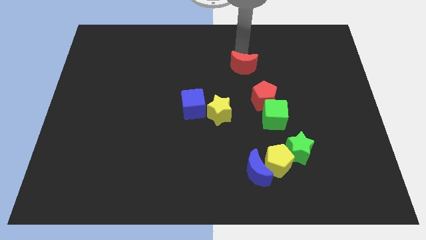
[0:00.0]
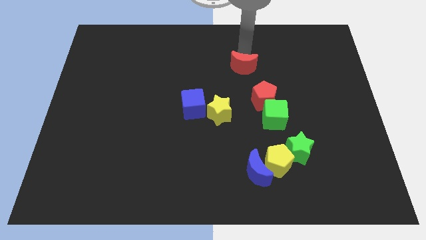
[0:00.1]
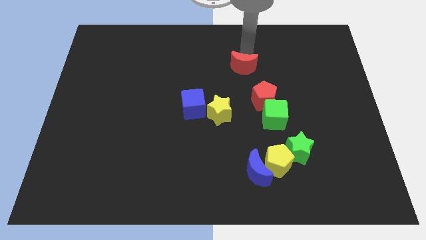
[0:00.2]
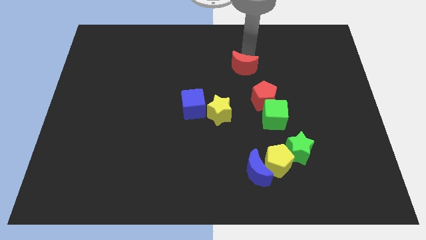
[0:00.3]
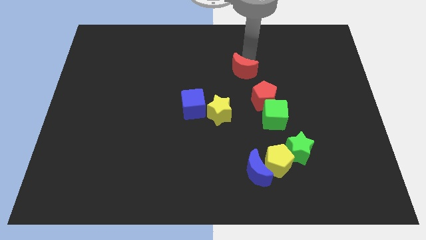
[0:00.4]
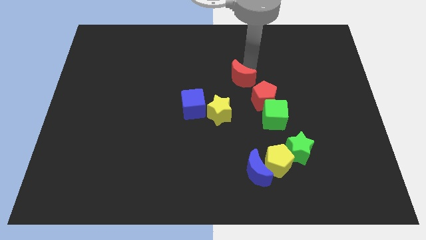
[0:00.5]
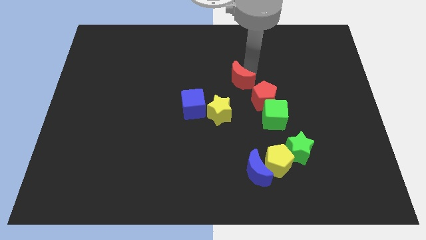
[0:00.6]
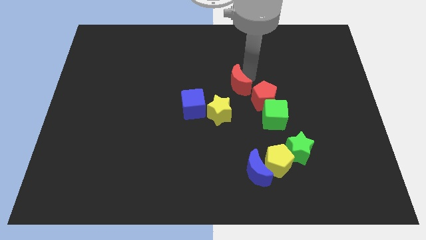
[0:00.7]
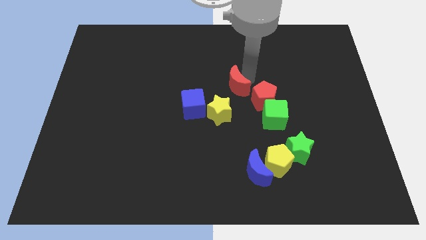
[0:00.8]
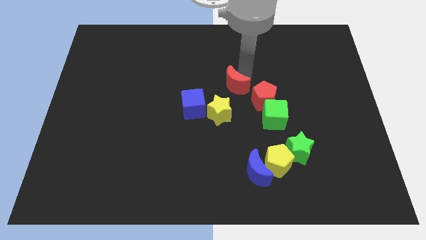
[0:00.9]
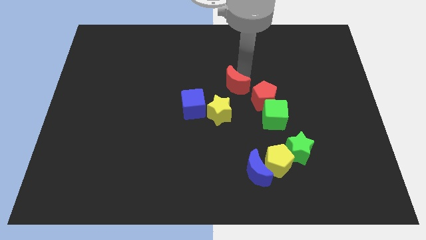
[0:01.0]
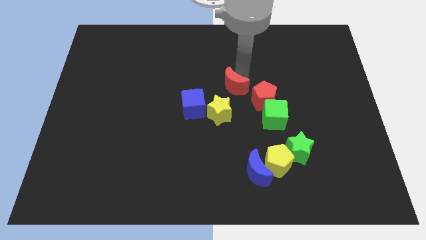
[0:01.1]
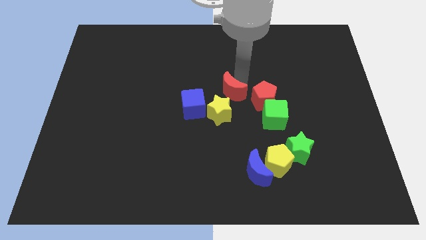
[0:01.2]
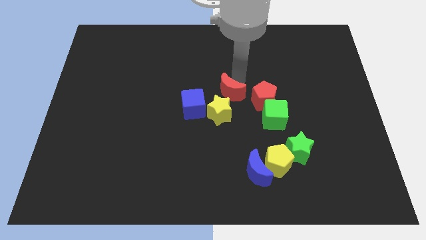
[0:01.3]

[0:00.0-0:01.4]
place the red crescent towards the top right side of the yellow star

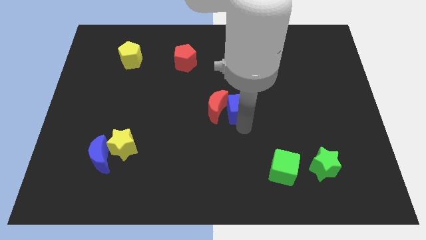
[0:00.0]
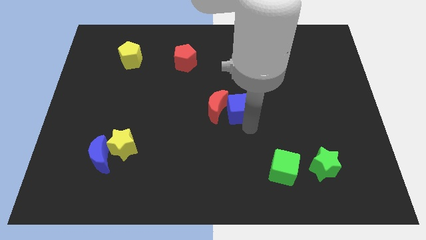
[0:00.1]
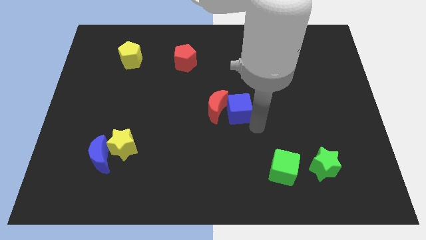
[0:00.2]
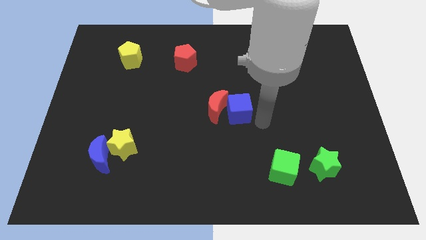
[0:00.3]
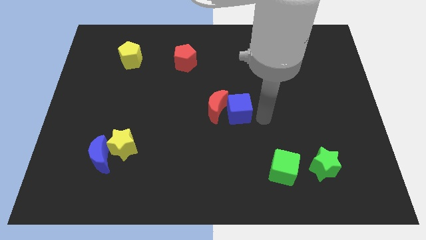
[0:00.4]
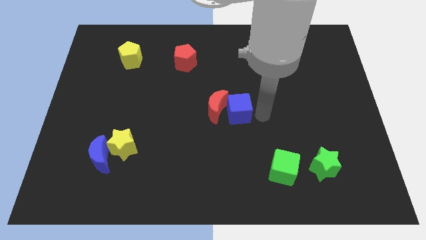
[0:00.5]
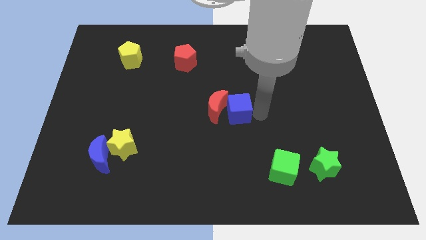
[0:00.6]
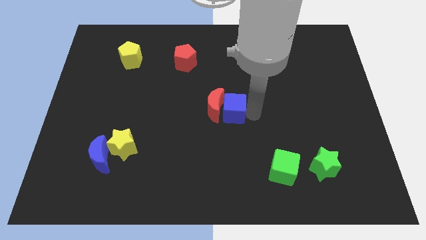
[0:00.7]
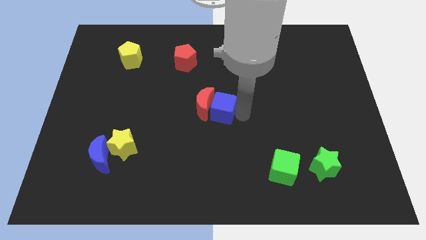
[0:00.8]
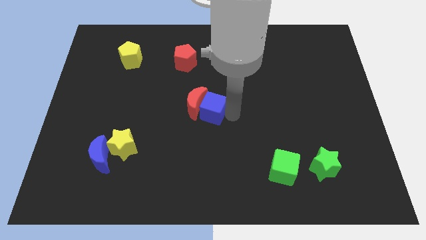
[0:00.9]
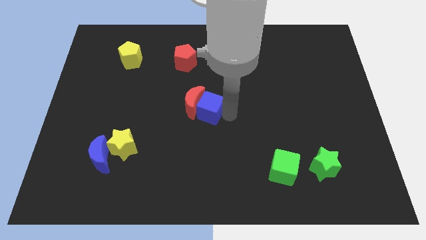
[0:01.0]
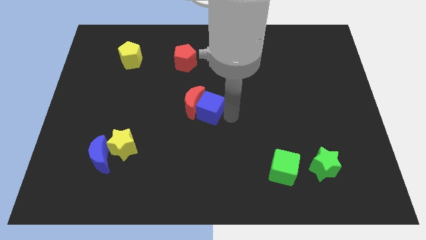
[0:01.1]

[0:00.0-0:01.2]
slide the blue cube and red crescent together to the center of the board

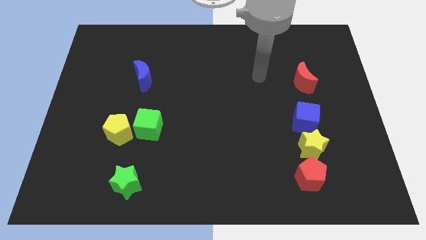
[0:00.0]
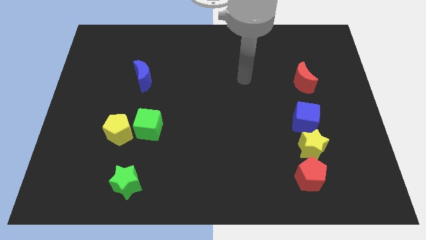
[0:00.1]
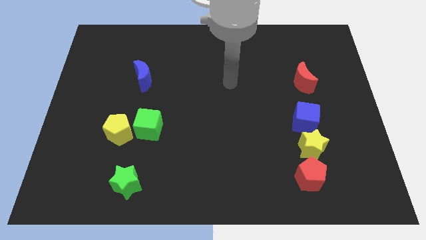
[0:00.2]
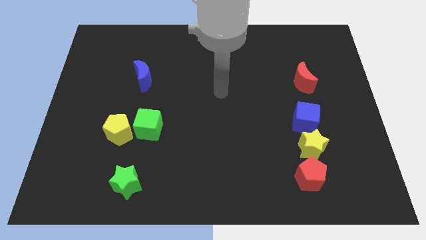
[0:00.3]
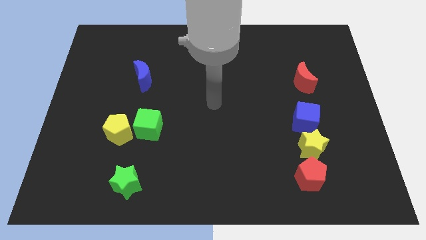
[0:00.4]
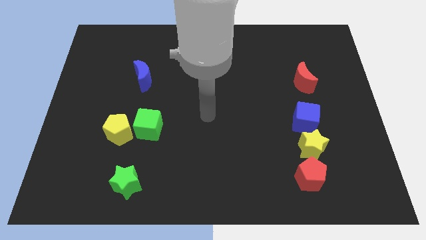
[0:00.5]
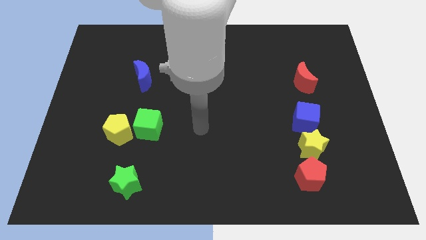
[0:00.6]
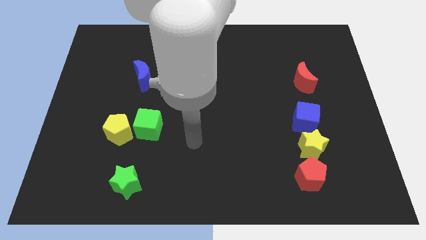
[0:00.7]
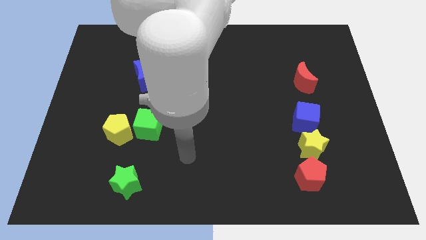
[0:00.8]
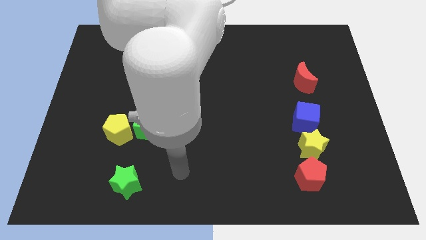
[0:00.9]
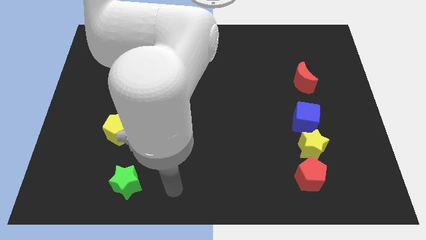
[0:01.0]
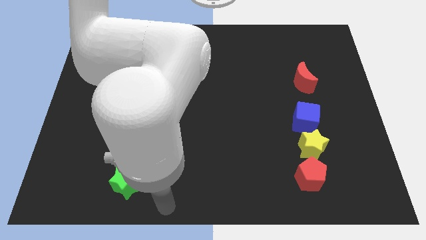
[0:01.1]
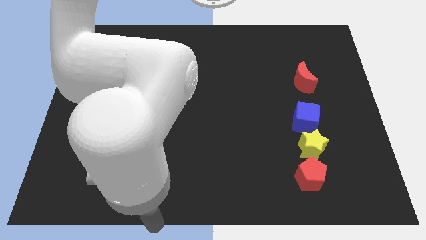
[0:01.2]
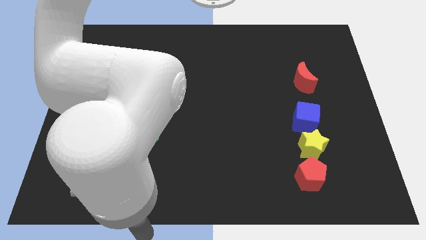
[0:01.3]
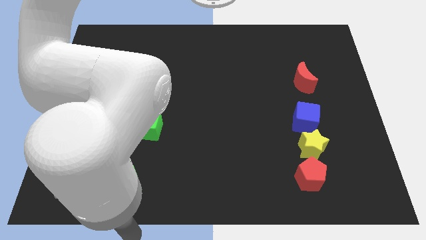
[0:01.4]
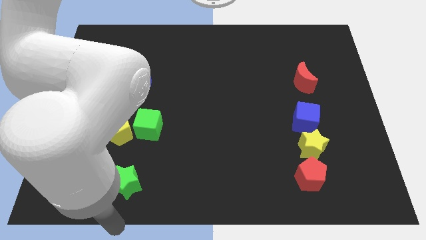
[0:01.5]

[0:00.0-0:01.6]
move the pointer to the bottom of the green star

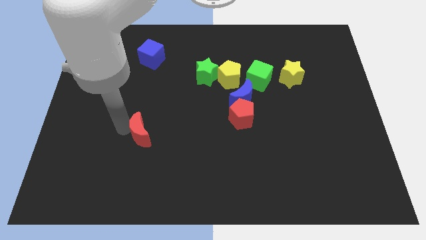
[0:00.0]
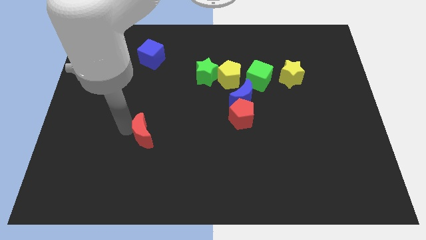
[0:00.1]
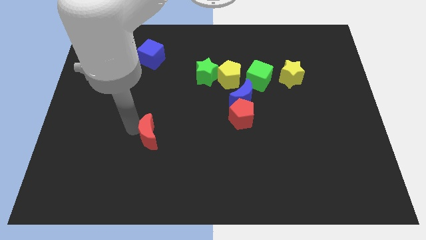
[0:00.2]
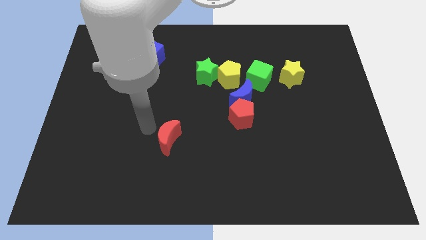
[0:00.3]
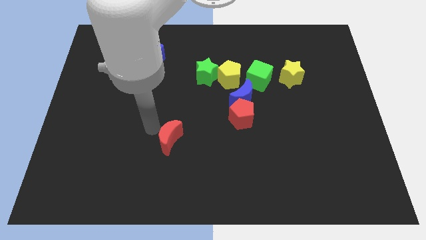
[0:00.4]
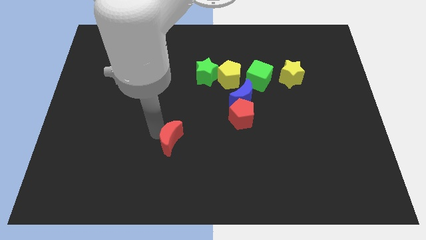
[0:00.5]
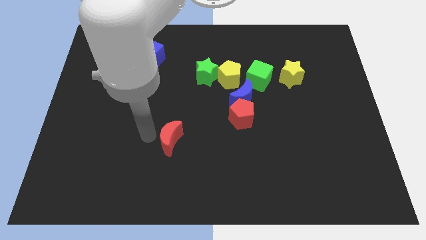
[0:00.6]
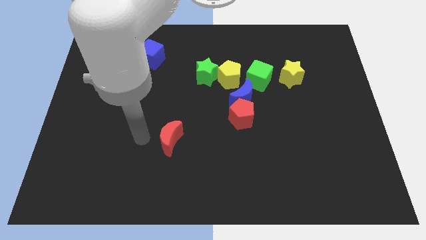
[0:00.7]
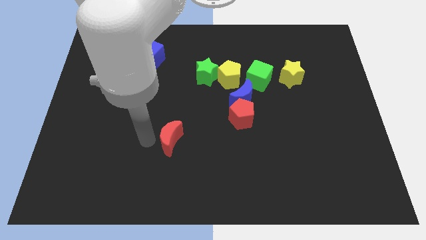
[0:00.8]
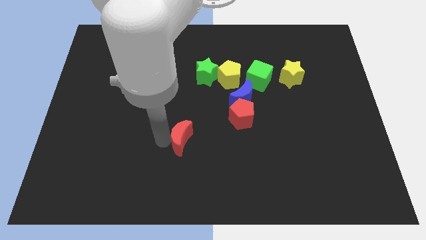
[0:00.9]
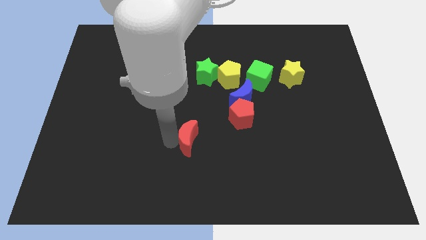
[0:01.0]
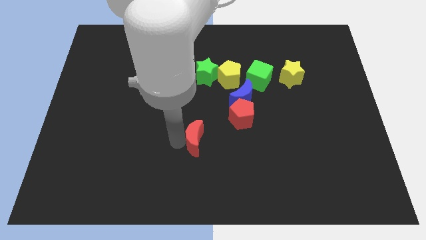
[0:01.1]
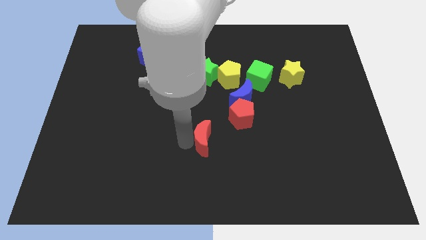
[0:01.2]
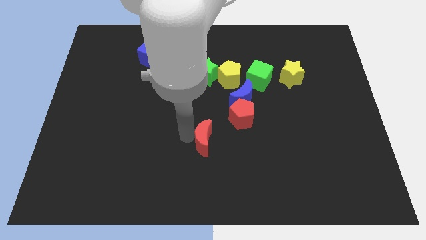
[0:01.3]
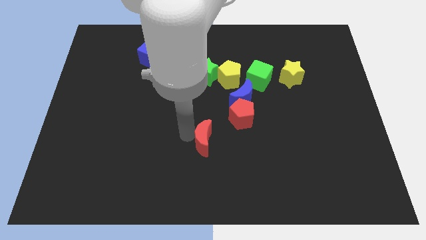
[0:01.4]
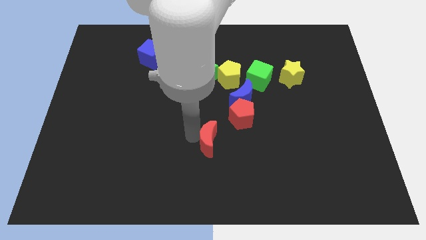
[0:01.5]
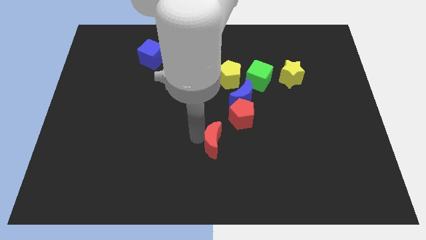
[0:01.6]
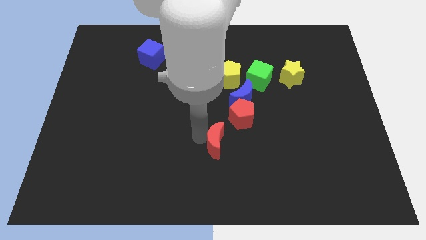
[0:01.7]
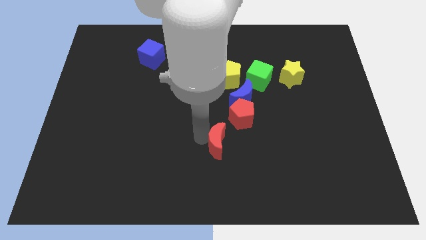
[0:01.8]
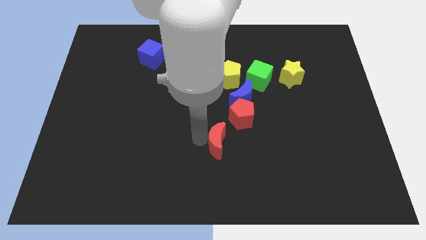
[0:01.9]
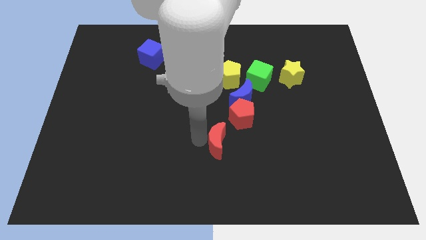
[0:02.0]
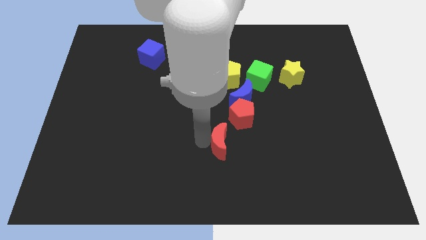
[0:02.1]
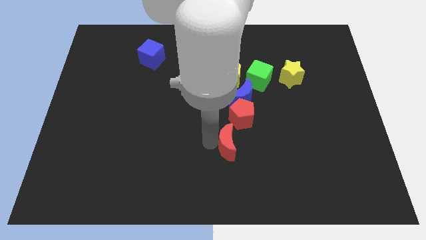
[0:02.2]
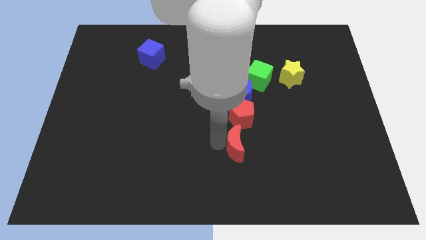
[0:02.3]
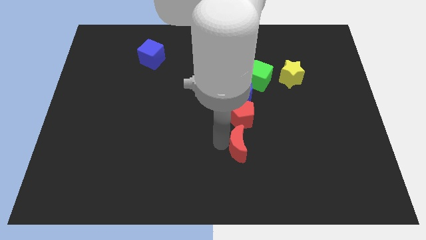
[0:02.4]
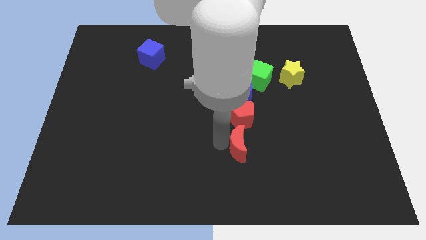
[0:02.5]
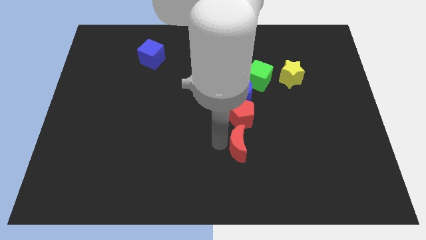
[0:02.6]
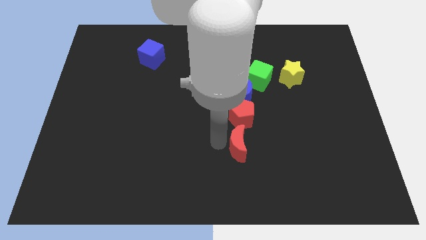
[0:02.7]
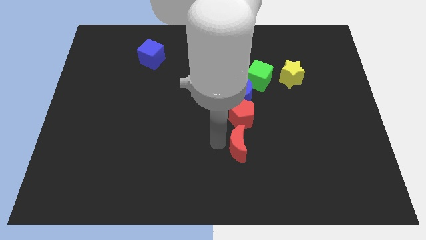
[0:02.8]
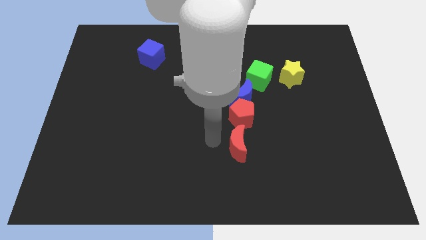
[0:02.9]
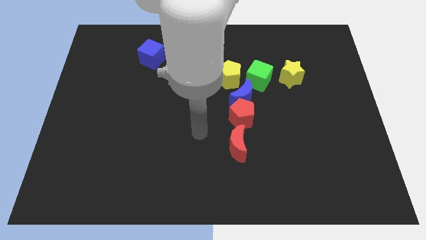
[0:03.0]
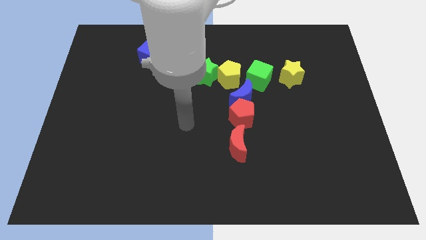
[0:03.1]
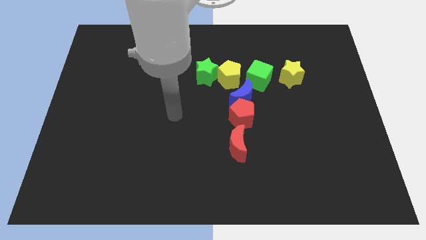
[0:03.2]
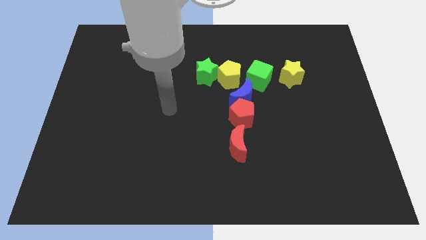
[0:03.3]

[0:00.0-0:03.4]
place the red moon at the bottom of red pentagon

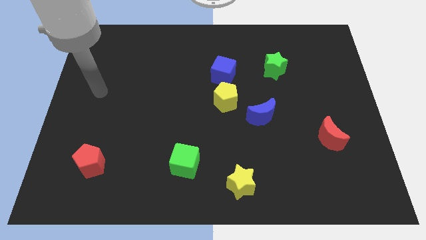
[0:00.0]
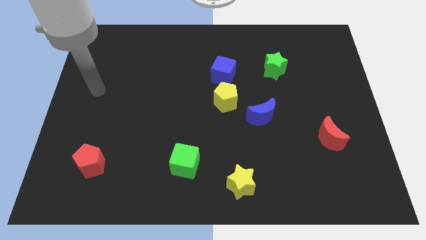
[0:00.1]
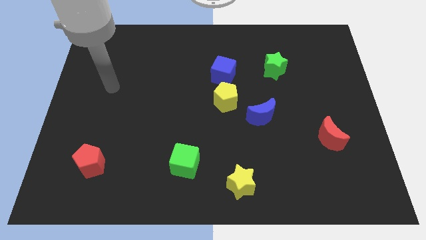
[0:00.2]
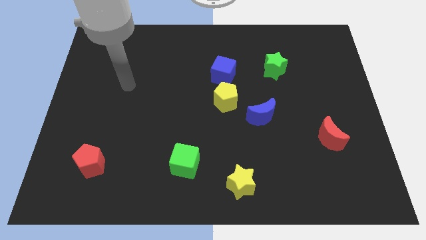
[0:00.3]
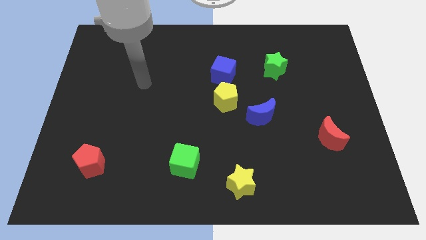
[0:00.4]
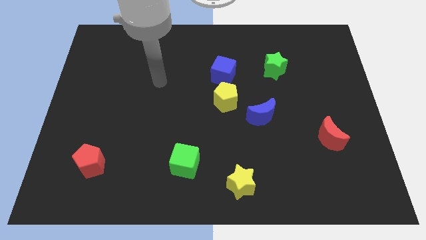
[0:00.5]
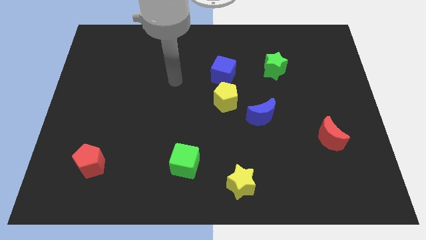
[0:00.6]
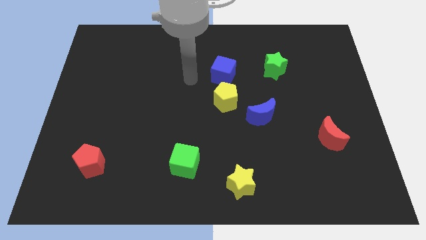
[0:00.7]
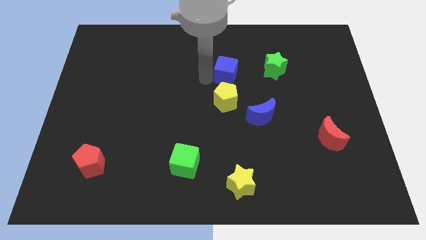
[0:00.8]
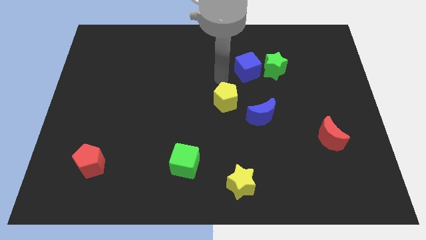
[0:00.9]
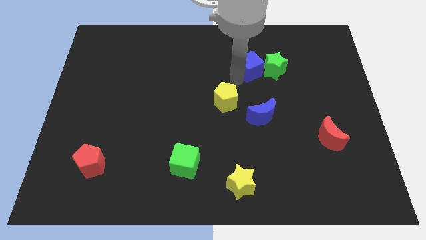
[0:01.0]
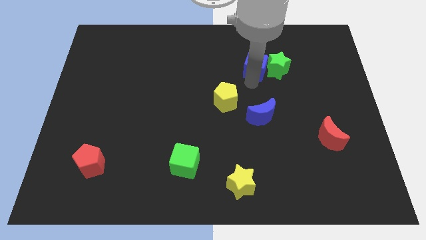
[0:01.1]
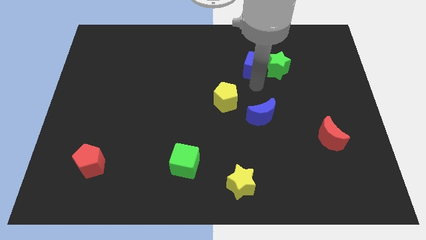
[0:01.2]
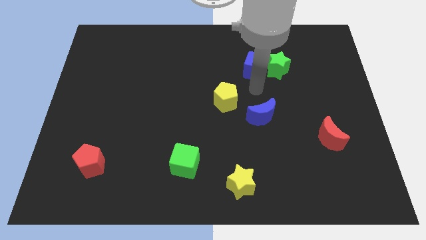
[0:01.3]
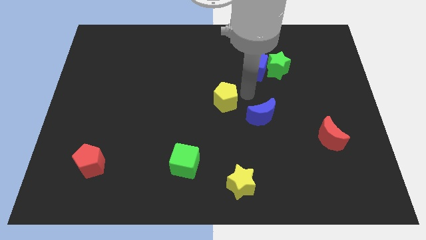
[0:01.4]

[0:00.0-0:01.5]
push the blue cube towards the green star
